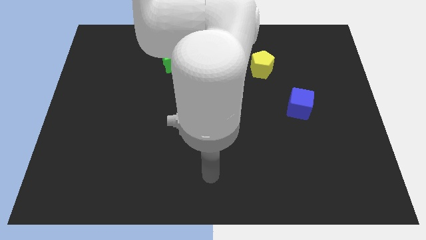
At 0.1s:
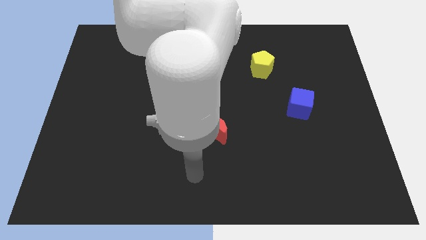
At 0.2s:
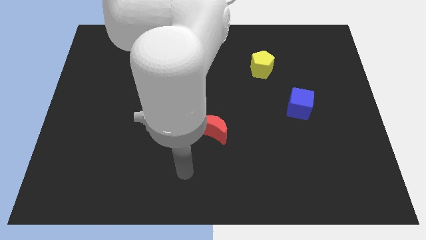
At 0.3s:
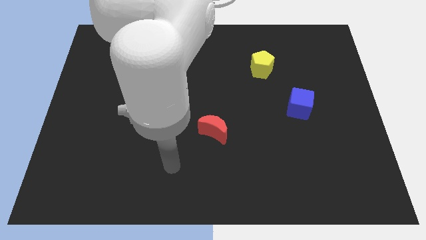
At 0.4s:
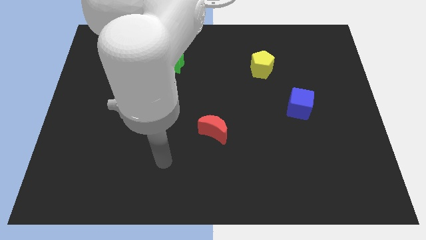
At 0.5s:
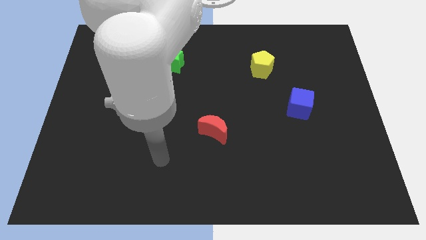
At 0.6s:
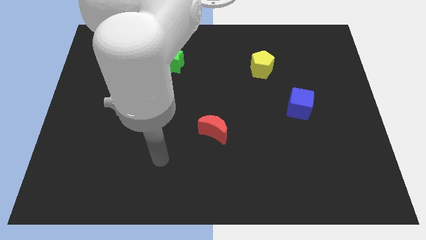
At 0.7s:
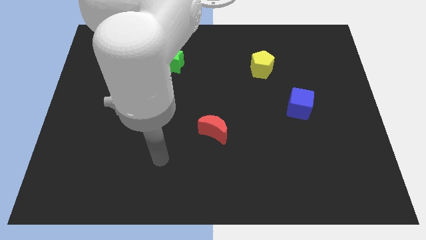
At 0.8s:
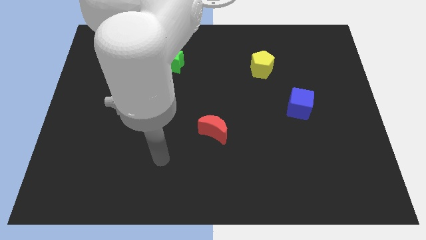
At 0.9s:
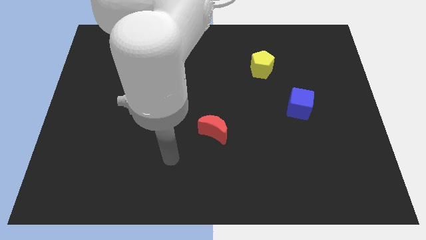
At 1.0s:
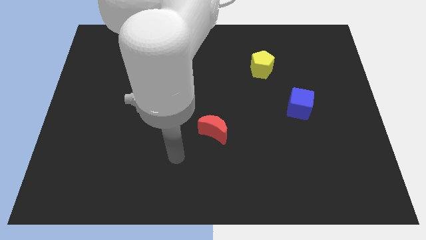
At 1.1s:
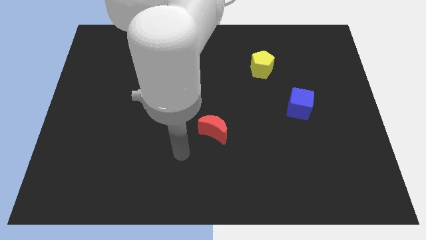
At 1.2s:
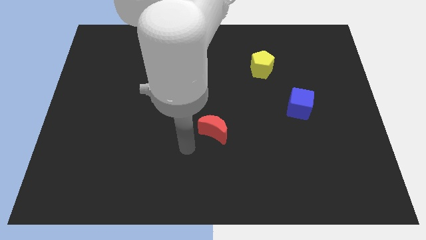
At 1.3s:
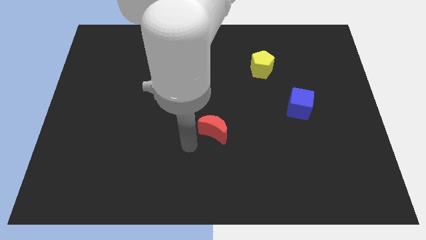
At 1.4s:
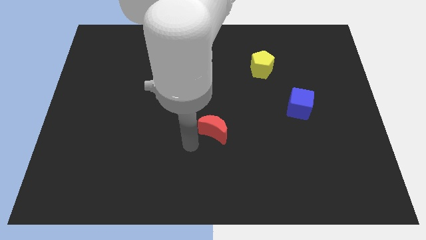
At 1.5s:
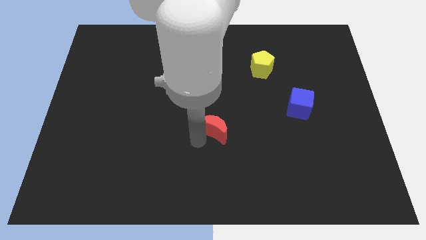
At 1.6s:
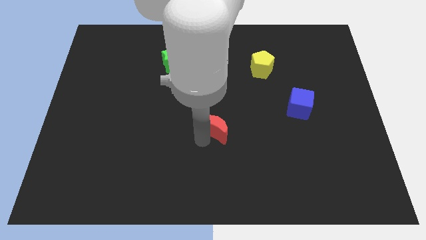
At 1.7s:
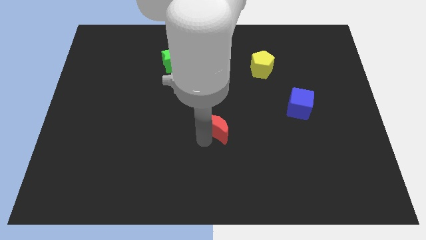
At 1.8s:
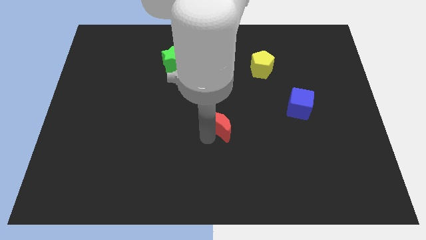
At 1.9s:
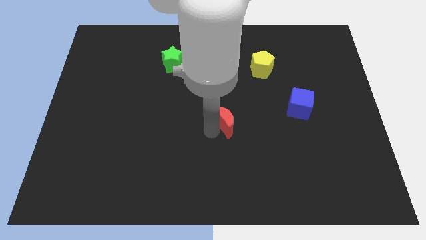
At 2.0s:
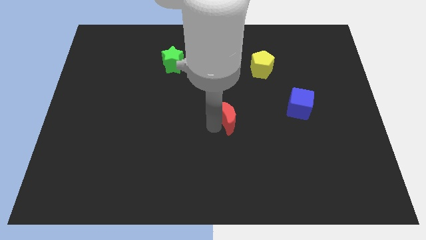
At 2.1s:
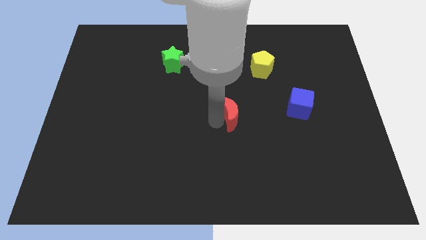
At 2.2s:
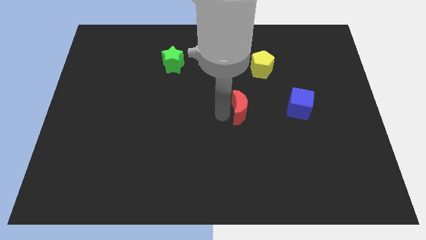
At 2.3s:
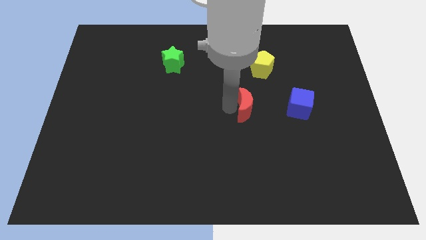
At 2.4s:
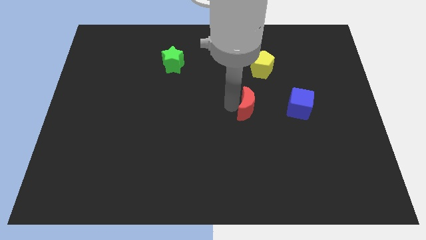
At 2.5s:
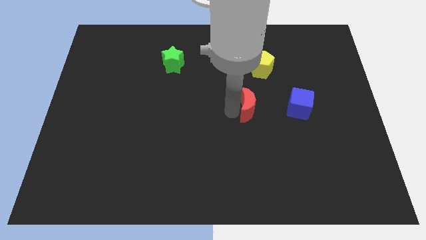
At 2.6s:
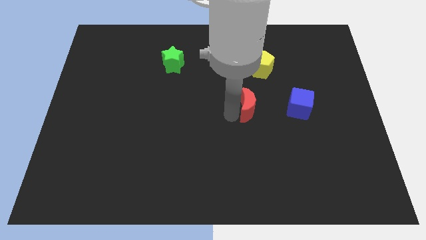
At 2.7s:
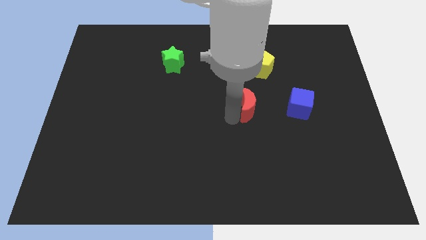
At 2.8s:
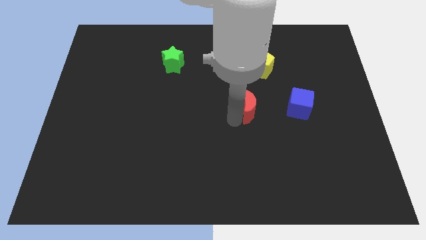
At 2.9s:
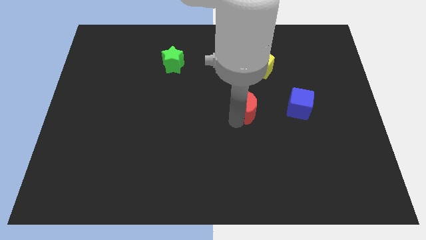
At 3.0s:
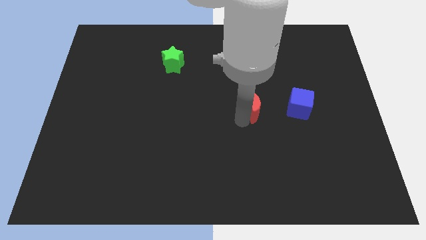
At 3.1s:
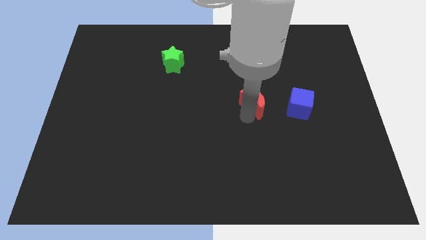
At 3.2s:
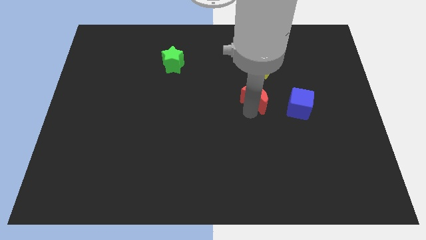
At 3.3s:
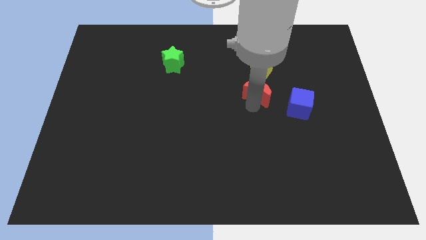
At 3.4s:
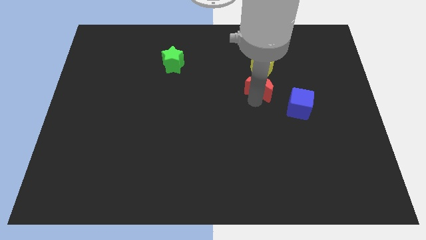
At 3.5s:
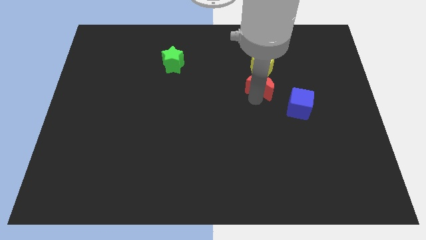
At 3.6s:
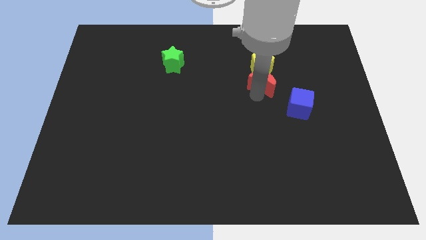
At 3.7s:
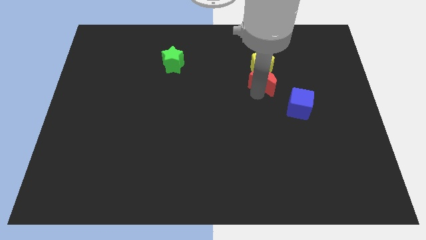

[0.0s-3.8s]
put the moon close to the pentagon

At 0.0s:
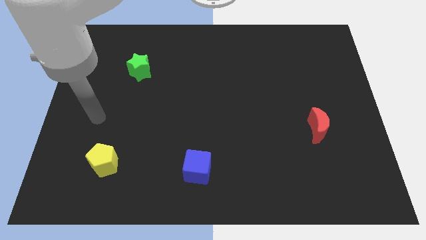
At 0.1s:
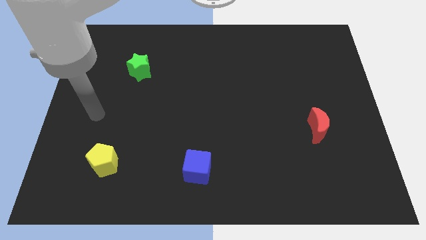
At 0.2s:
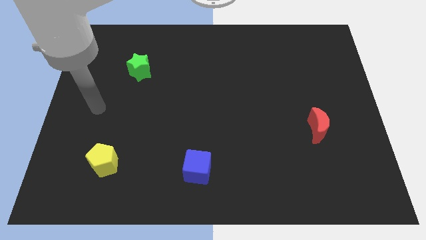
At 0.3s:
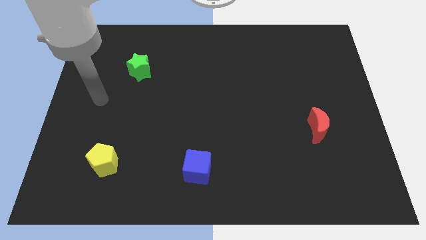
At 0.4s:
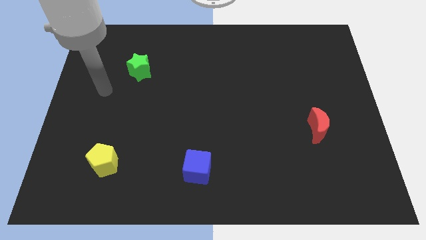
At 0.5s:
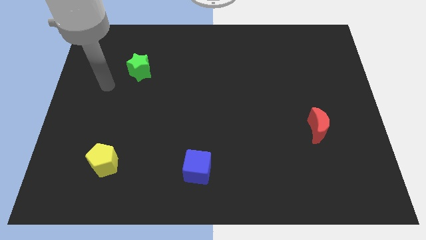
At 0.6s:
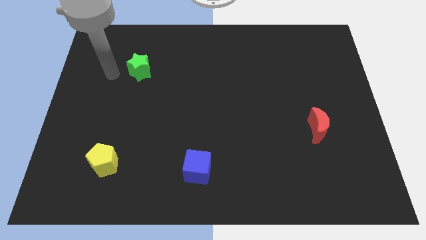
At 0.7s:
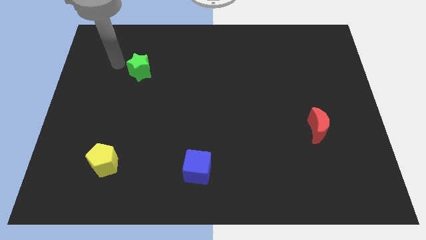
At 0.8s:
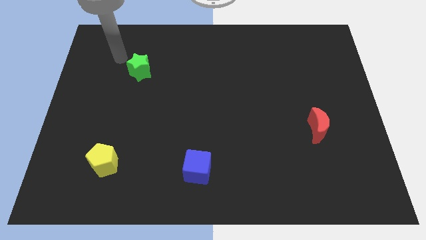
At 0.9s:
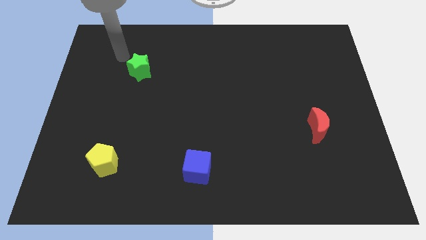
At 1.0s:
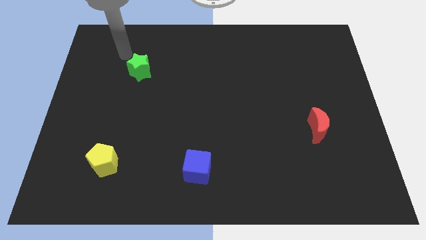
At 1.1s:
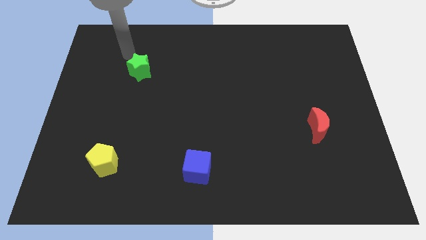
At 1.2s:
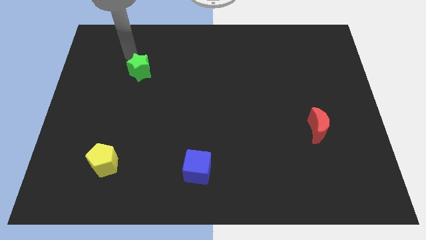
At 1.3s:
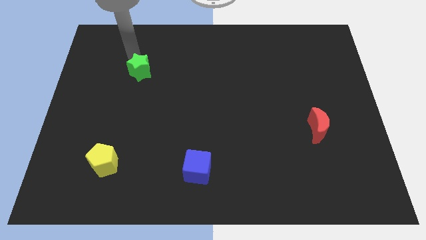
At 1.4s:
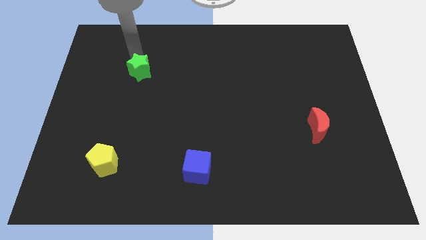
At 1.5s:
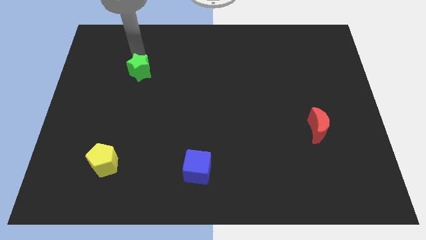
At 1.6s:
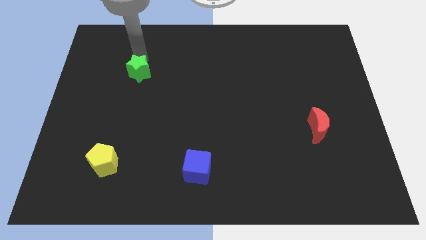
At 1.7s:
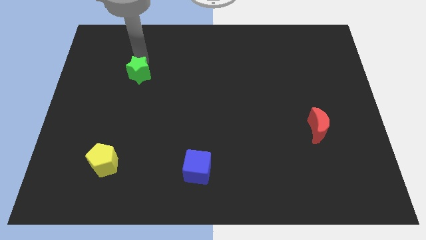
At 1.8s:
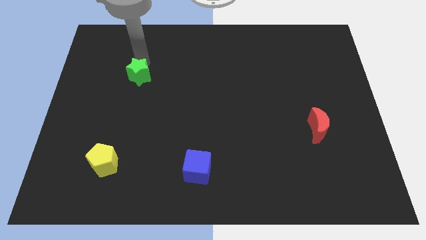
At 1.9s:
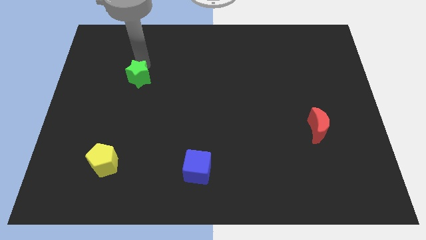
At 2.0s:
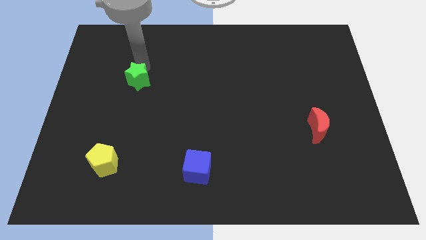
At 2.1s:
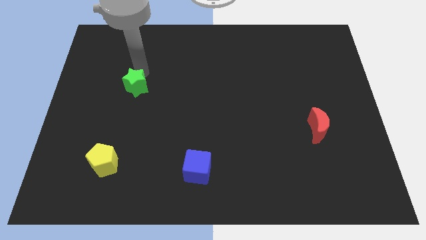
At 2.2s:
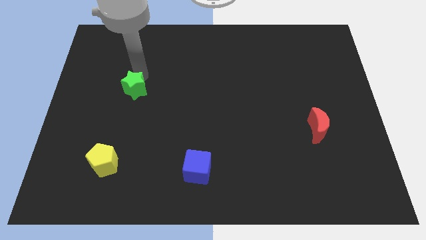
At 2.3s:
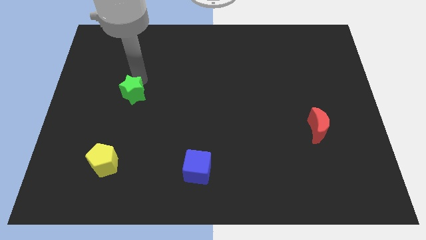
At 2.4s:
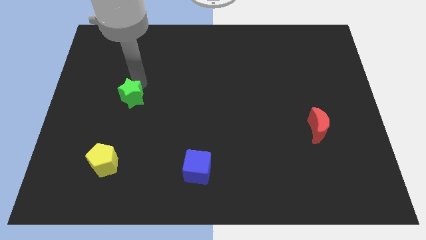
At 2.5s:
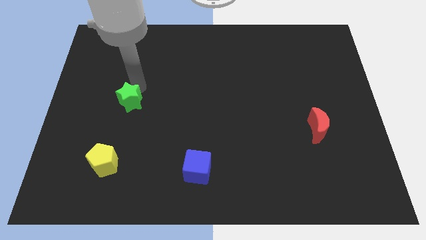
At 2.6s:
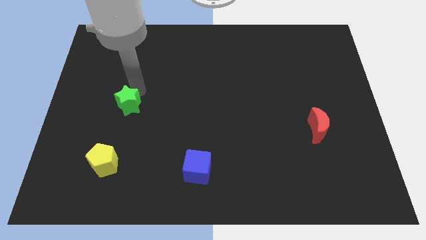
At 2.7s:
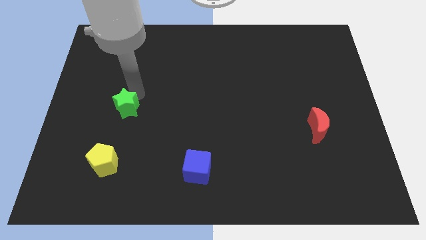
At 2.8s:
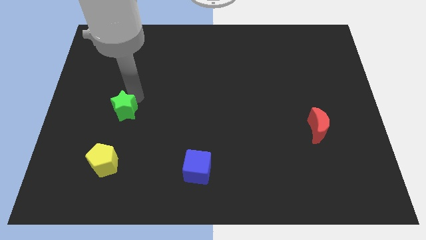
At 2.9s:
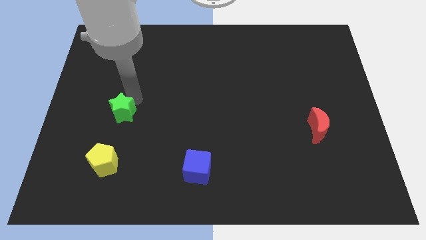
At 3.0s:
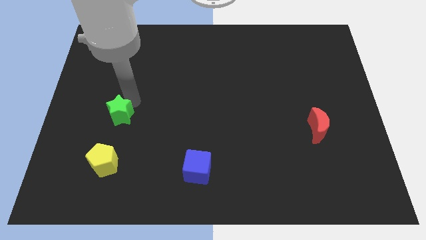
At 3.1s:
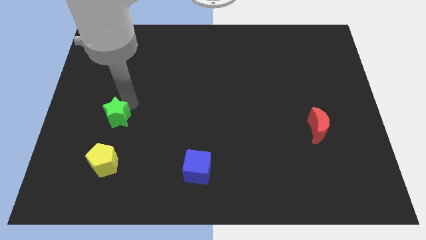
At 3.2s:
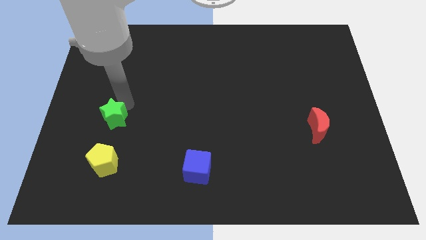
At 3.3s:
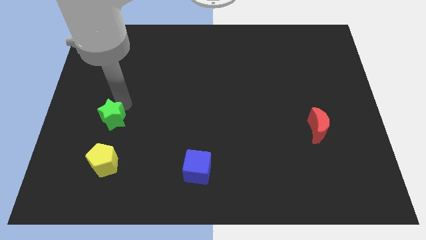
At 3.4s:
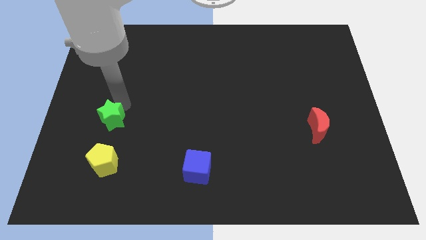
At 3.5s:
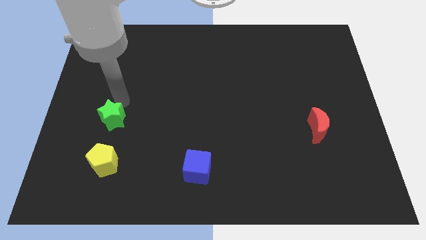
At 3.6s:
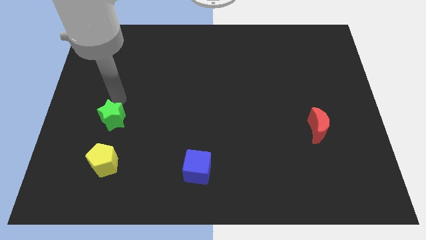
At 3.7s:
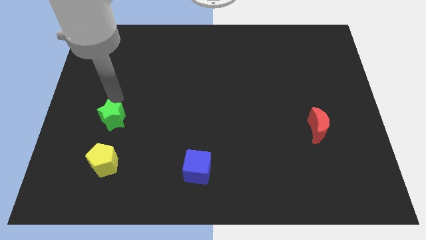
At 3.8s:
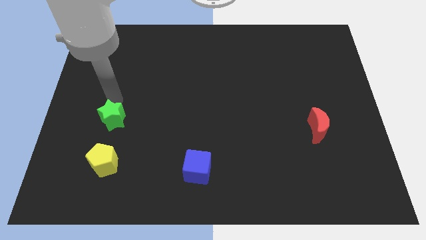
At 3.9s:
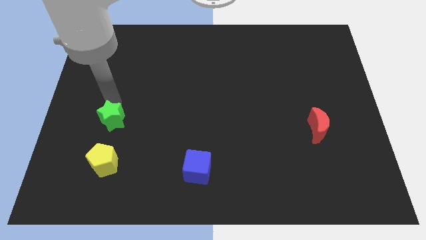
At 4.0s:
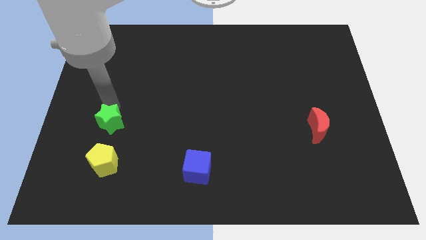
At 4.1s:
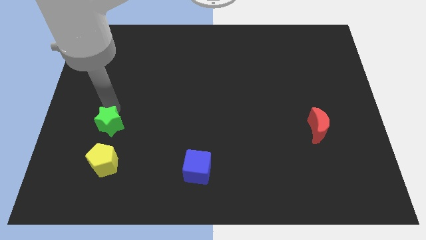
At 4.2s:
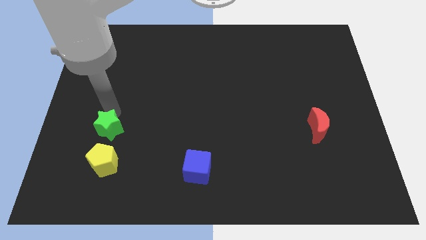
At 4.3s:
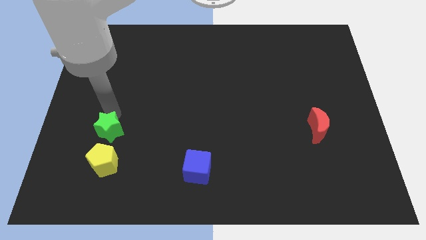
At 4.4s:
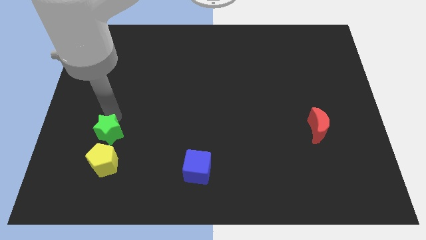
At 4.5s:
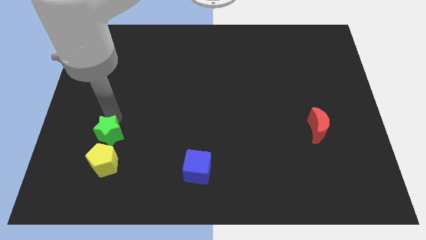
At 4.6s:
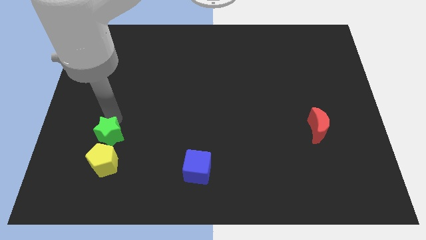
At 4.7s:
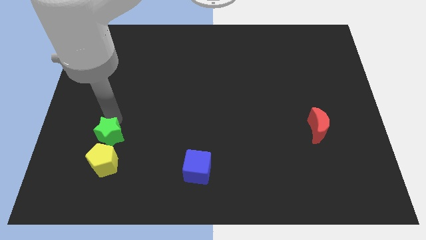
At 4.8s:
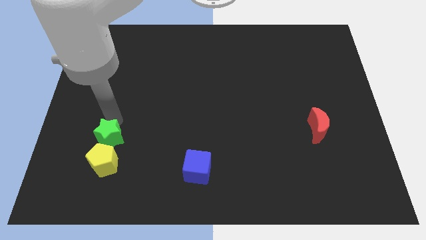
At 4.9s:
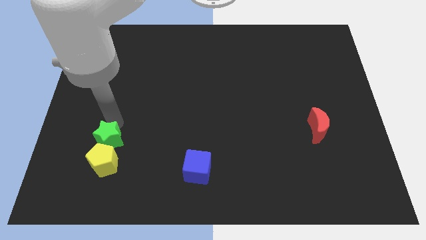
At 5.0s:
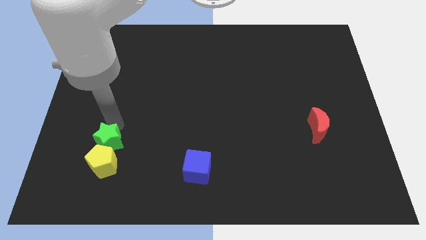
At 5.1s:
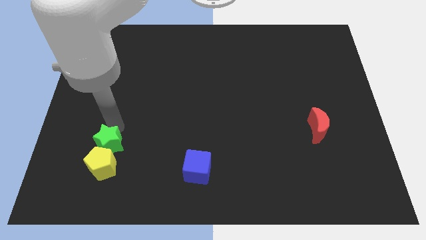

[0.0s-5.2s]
slide the star close to the yellow pentagon
